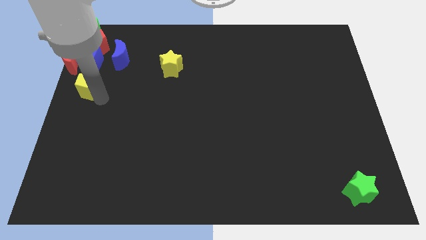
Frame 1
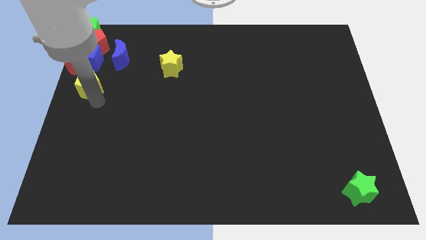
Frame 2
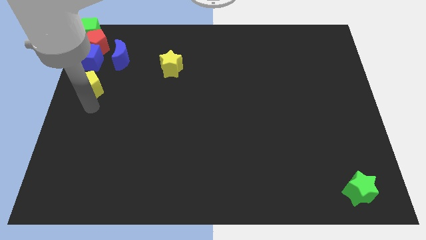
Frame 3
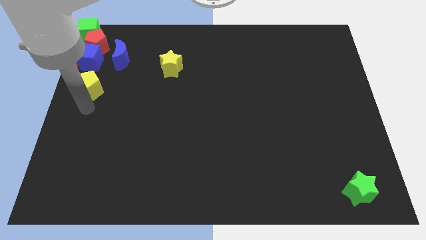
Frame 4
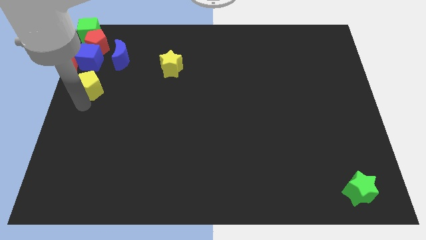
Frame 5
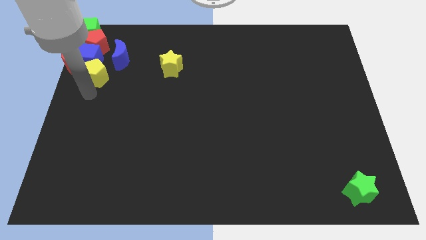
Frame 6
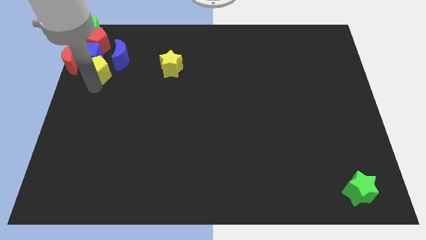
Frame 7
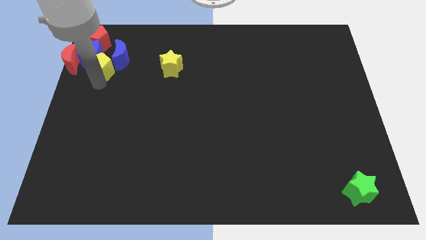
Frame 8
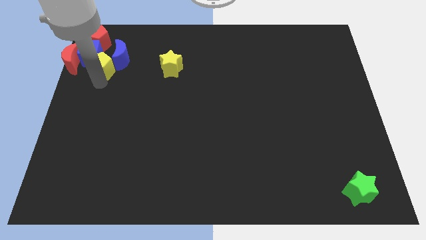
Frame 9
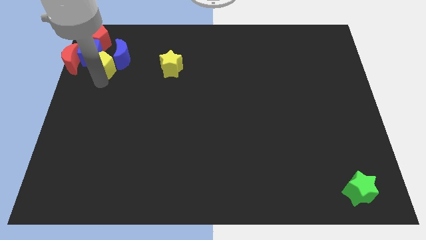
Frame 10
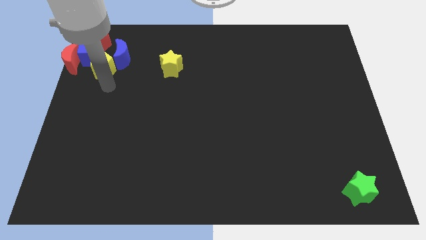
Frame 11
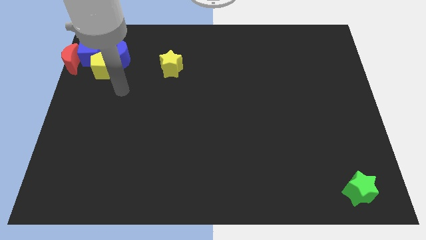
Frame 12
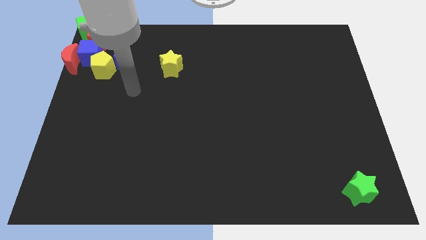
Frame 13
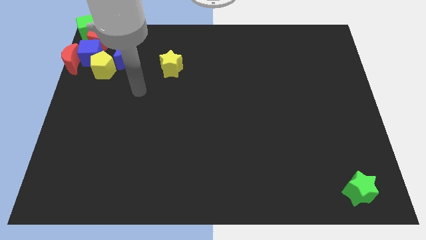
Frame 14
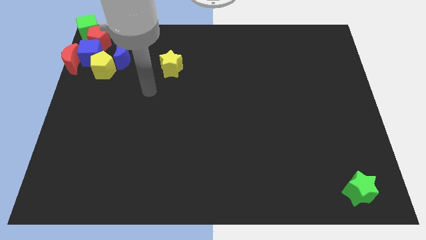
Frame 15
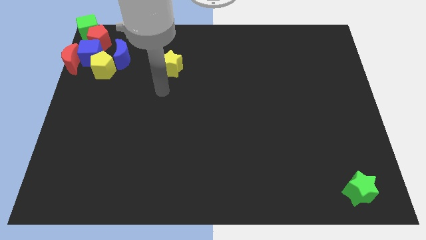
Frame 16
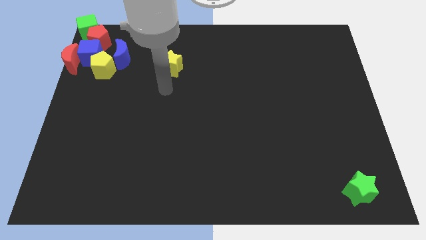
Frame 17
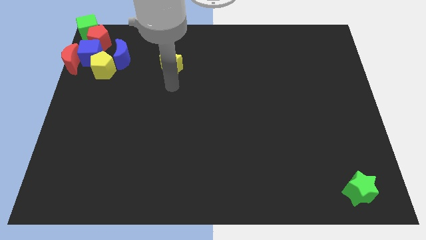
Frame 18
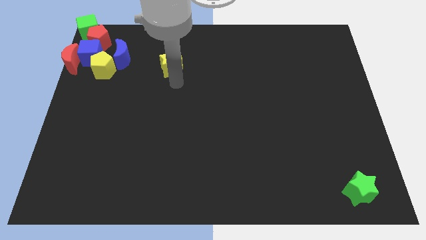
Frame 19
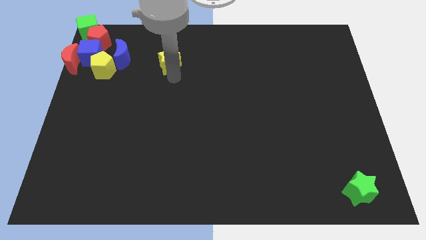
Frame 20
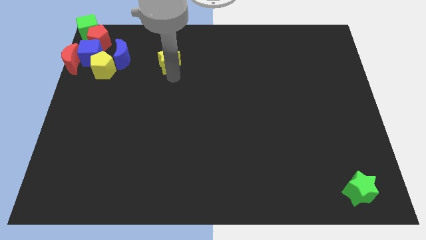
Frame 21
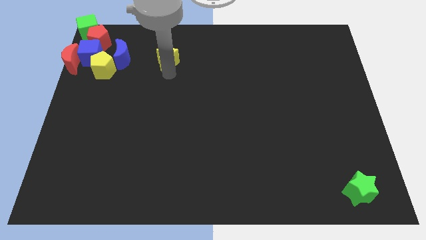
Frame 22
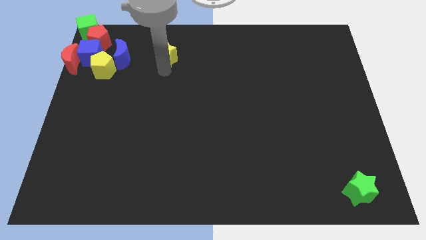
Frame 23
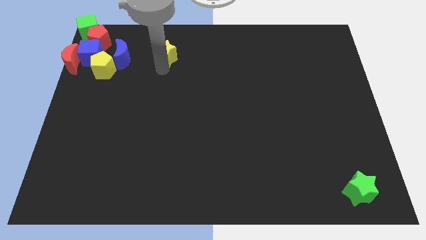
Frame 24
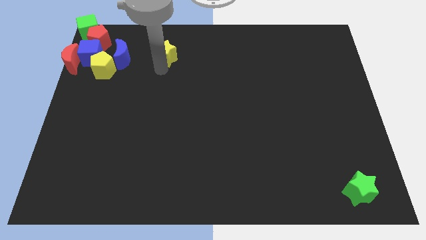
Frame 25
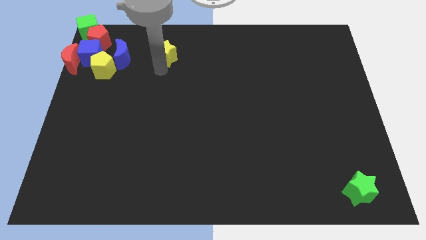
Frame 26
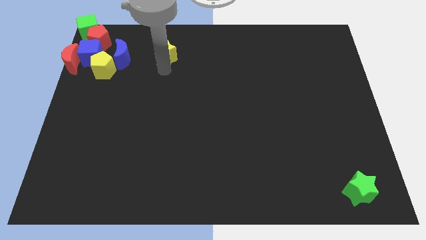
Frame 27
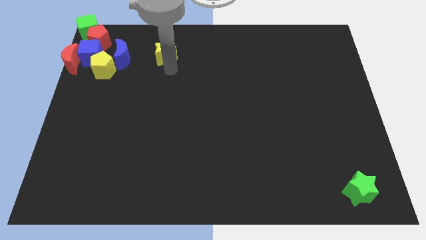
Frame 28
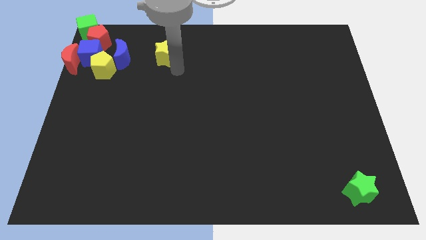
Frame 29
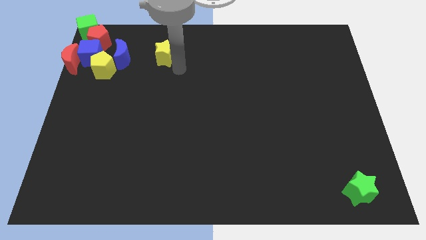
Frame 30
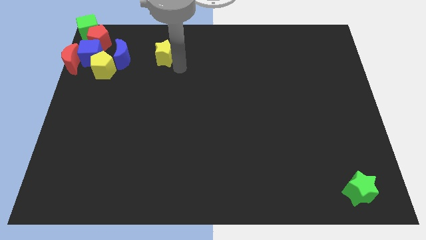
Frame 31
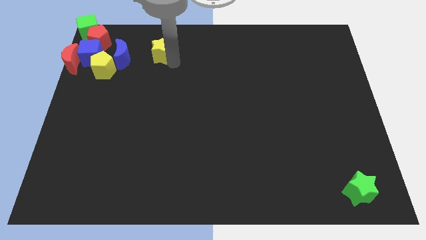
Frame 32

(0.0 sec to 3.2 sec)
move the yellow star parallel to the right of the blue crescent

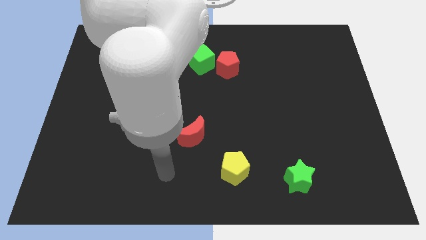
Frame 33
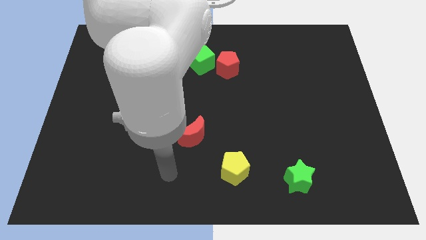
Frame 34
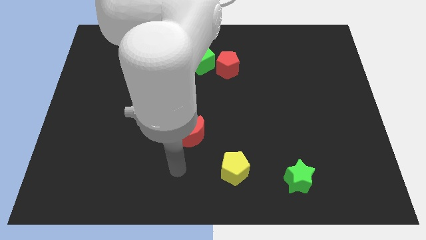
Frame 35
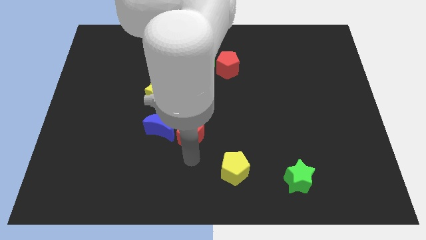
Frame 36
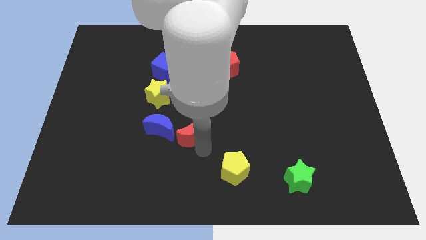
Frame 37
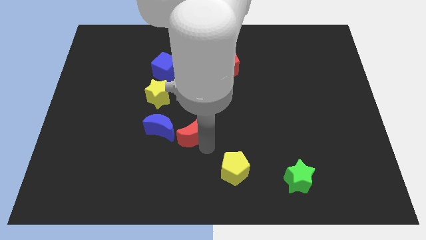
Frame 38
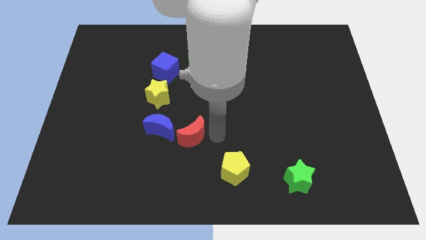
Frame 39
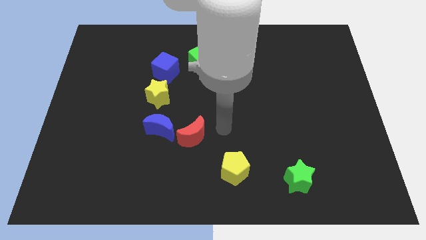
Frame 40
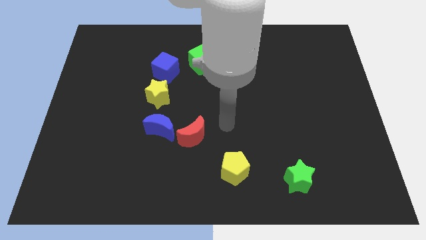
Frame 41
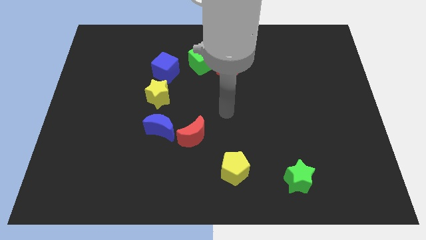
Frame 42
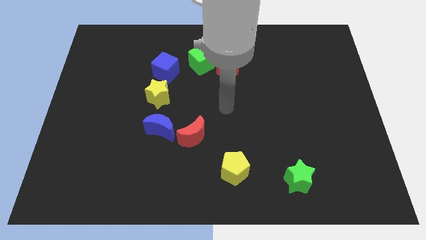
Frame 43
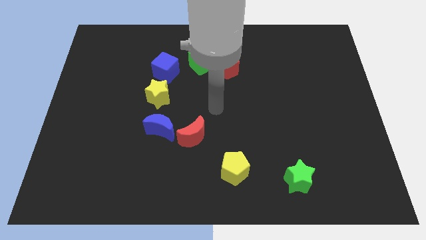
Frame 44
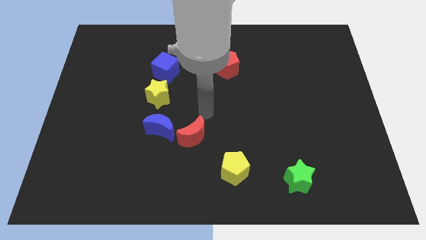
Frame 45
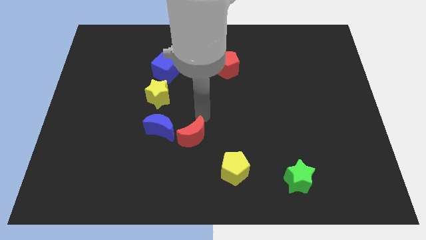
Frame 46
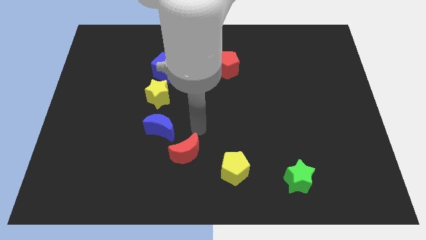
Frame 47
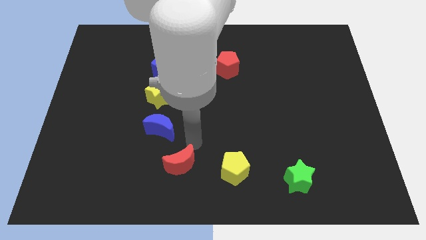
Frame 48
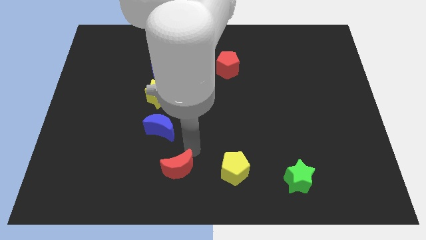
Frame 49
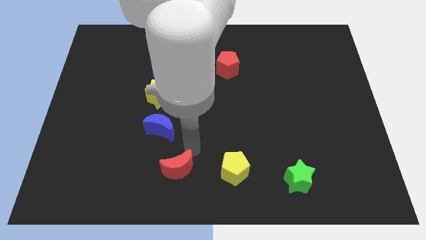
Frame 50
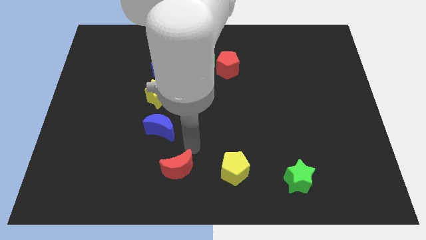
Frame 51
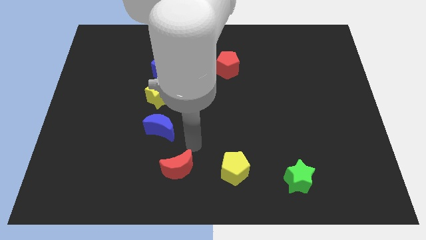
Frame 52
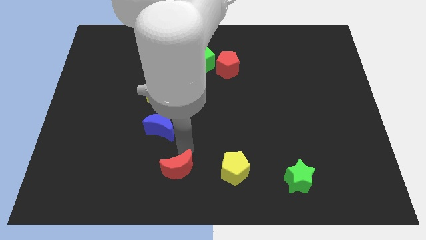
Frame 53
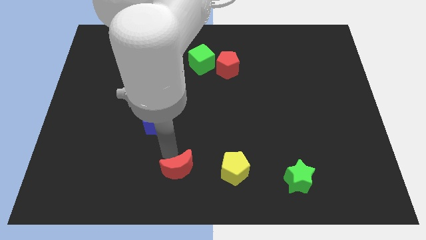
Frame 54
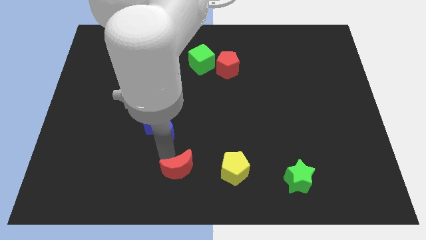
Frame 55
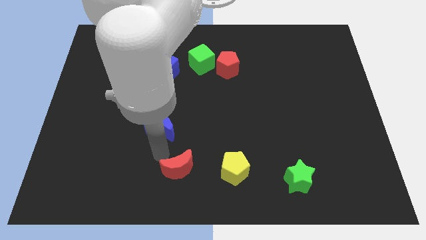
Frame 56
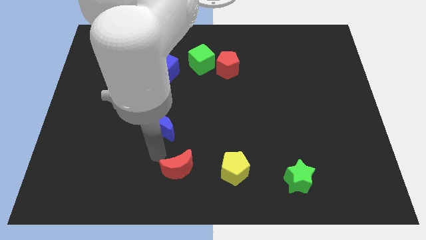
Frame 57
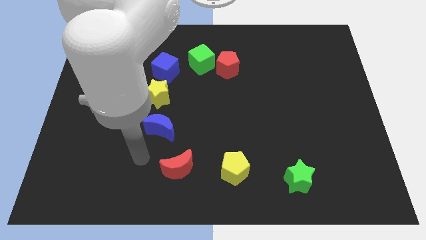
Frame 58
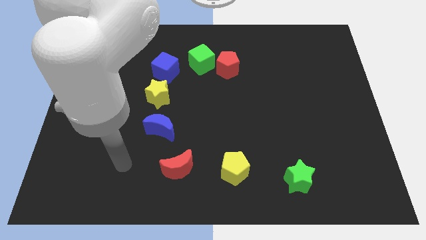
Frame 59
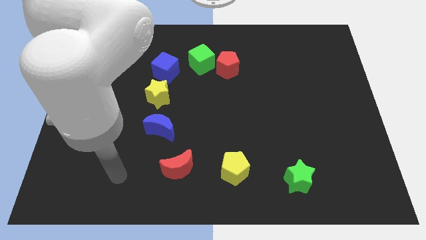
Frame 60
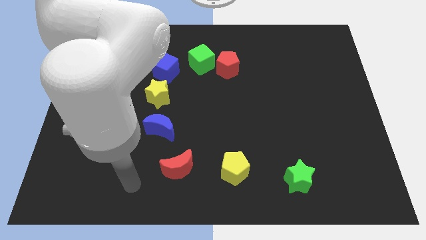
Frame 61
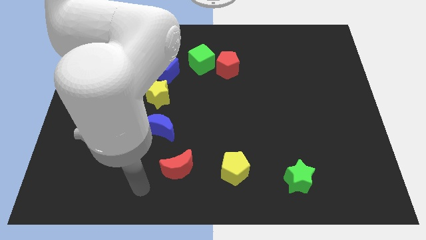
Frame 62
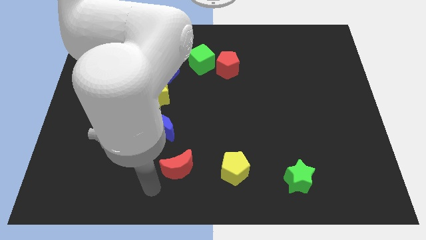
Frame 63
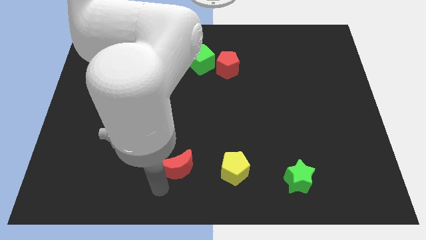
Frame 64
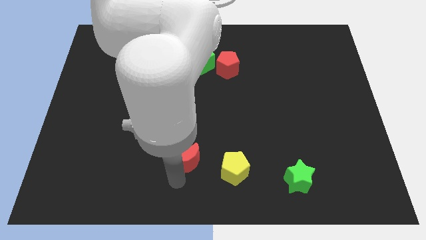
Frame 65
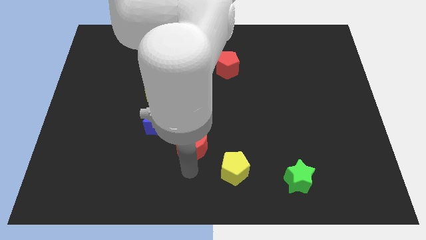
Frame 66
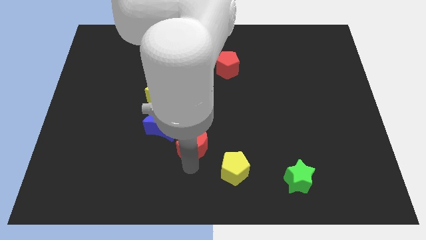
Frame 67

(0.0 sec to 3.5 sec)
move the red crescent away from the blue crescent

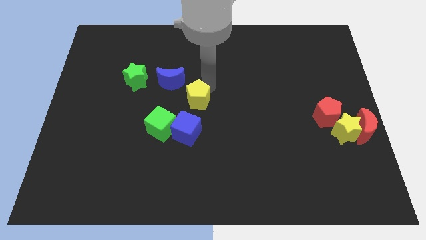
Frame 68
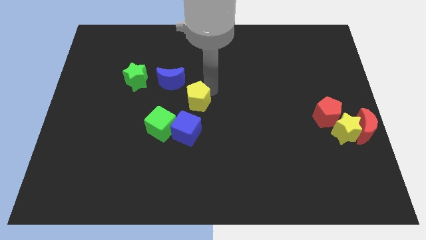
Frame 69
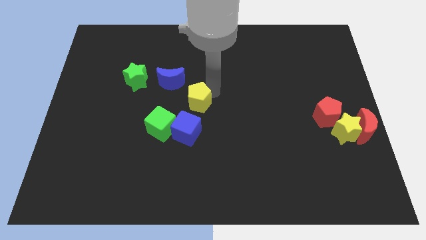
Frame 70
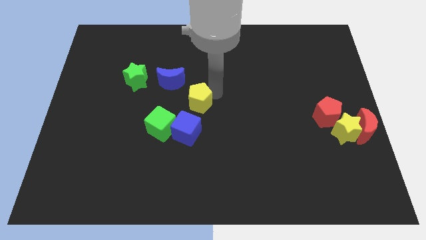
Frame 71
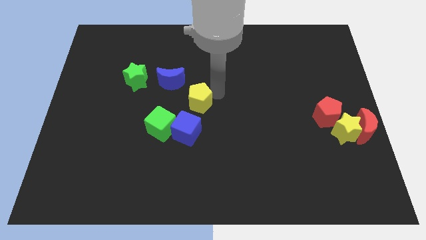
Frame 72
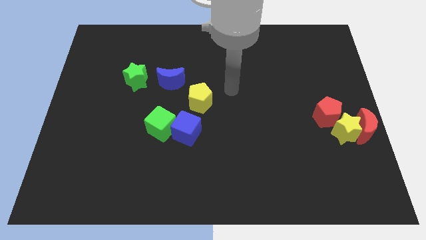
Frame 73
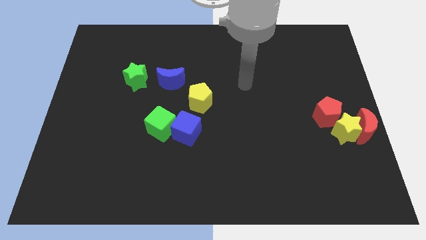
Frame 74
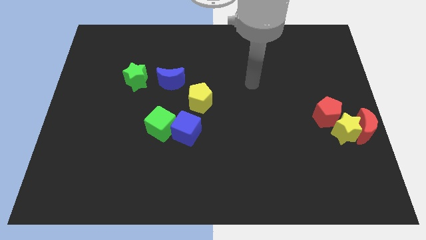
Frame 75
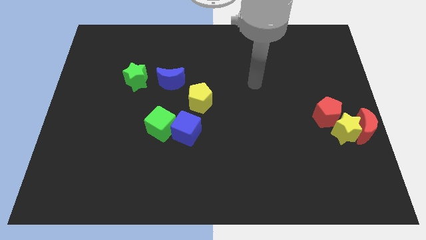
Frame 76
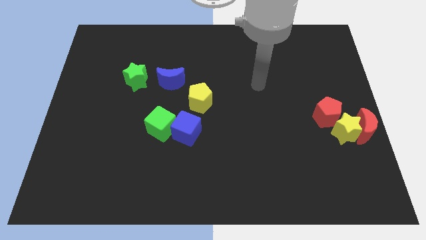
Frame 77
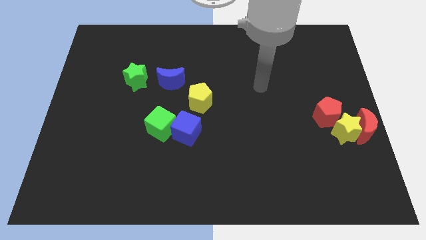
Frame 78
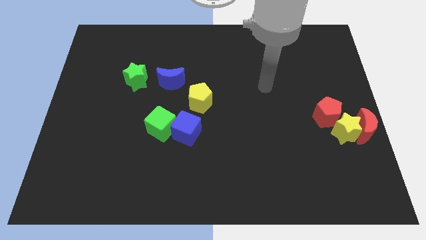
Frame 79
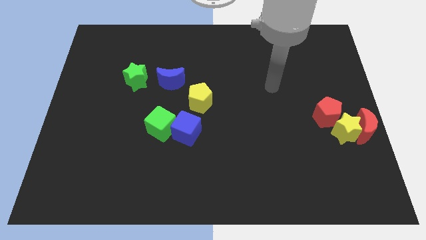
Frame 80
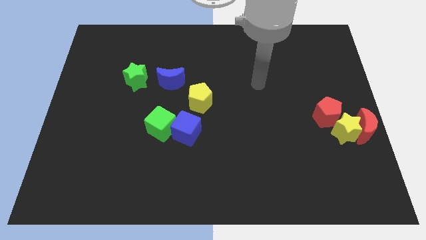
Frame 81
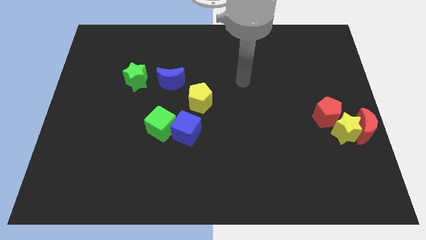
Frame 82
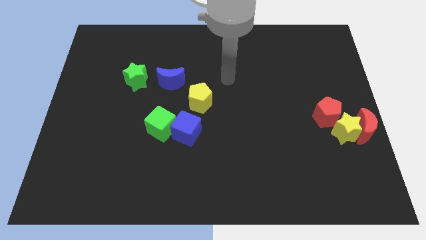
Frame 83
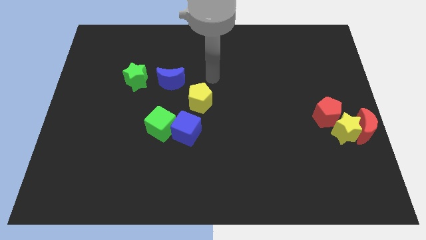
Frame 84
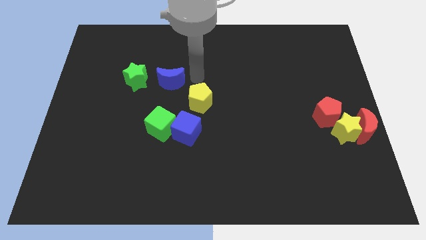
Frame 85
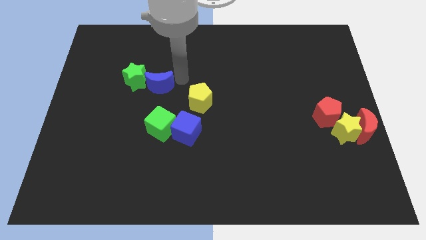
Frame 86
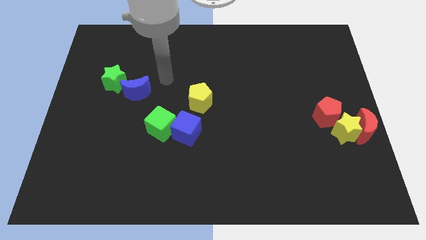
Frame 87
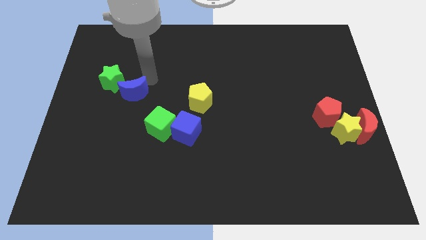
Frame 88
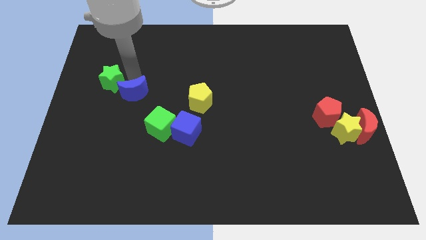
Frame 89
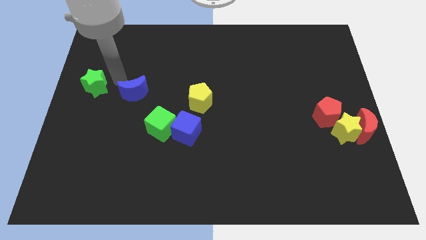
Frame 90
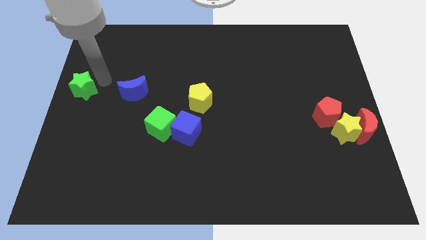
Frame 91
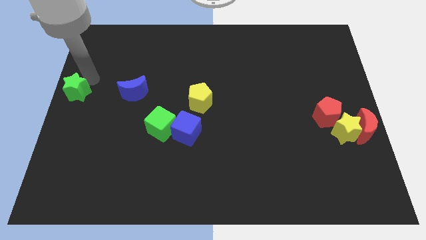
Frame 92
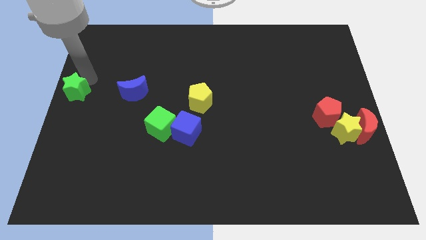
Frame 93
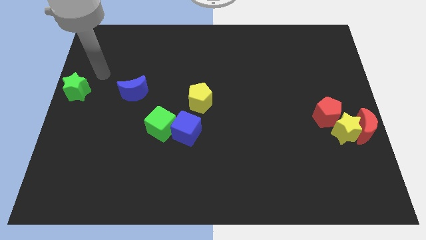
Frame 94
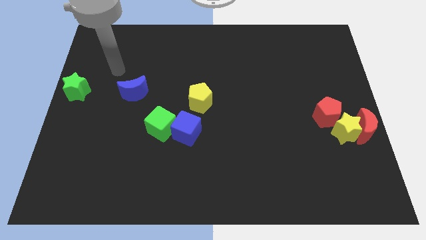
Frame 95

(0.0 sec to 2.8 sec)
push green star towards left middle of the board
